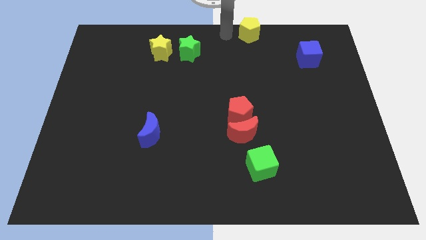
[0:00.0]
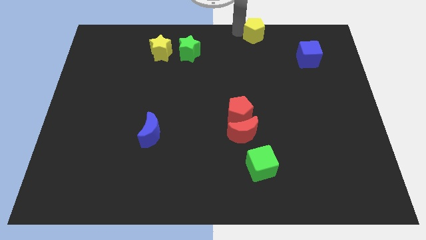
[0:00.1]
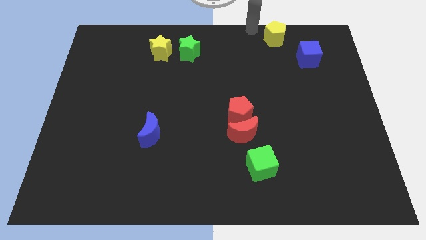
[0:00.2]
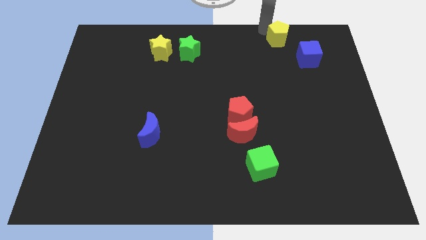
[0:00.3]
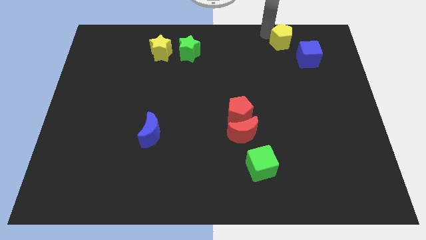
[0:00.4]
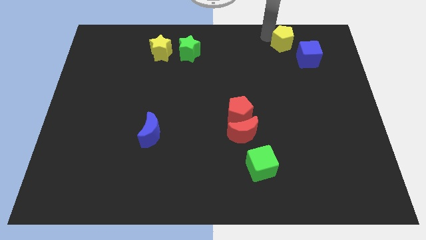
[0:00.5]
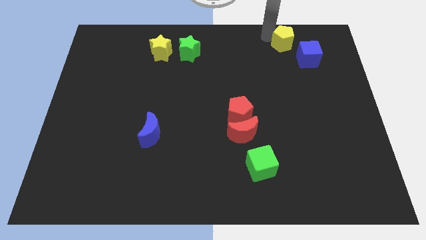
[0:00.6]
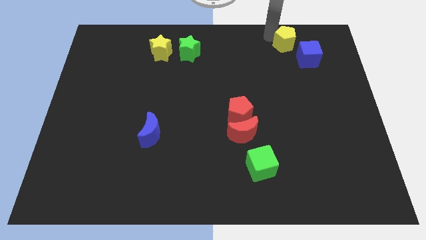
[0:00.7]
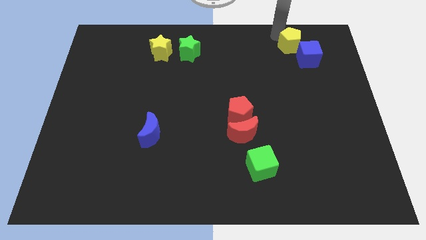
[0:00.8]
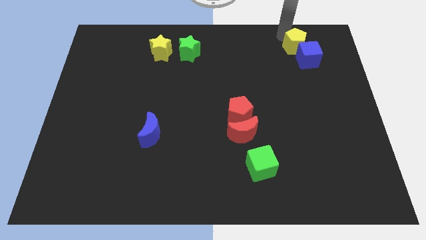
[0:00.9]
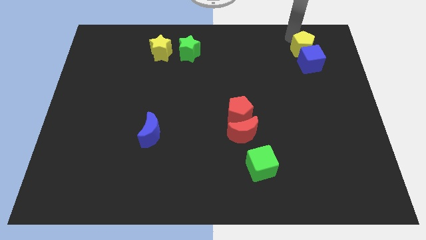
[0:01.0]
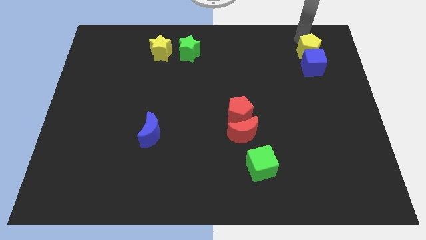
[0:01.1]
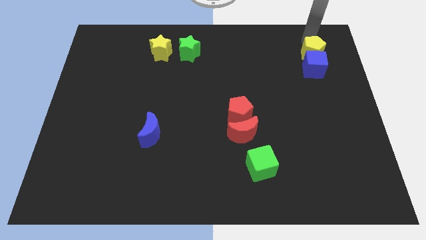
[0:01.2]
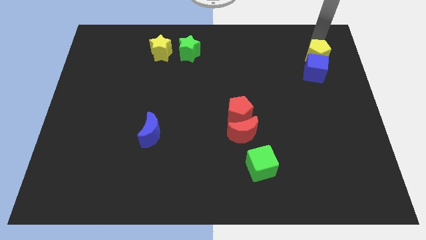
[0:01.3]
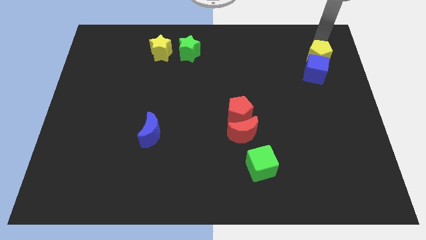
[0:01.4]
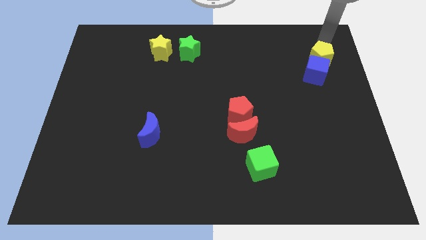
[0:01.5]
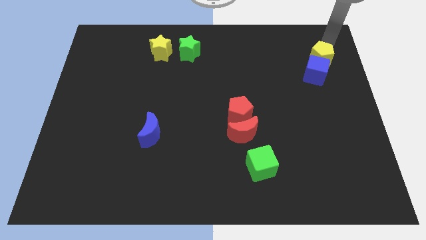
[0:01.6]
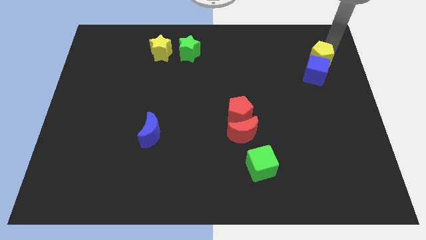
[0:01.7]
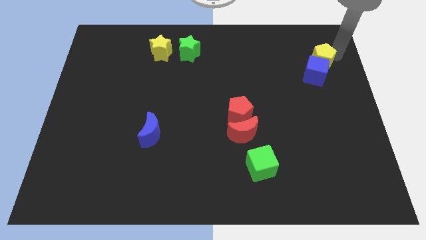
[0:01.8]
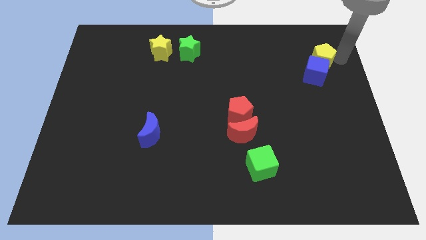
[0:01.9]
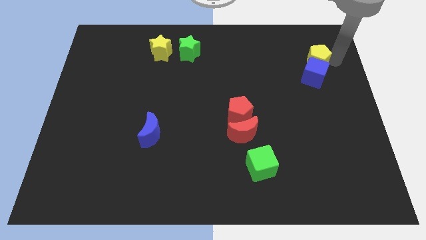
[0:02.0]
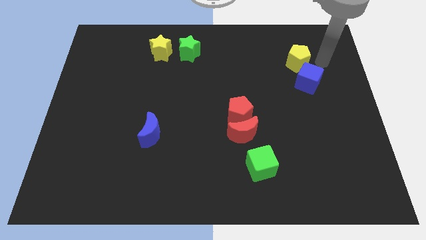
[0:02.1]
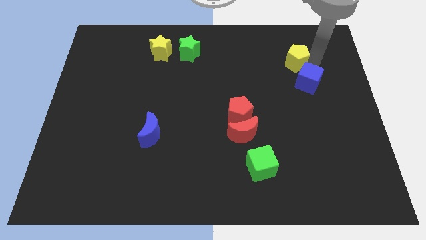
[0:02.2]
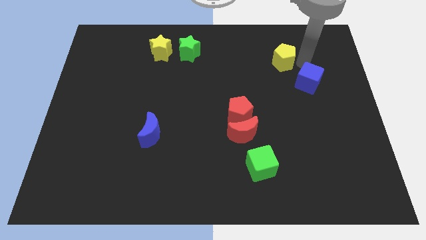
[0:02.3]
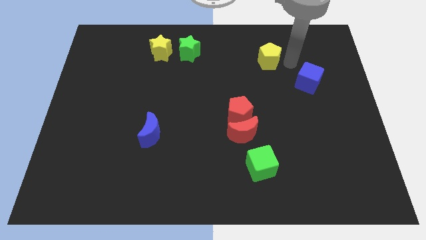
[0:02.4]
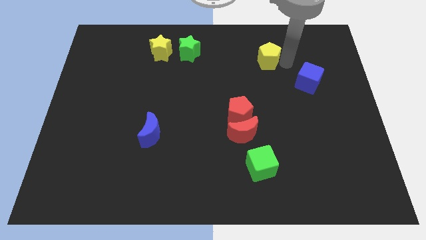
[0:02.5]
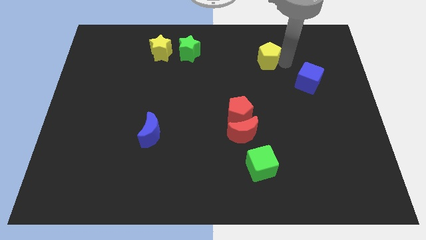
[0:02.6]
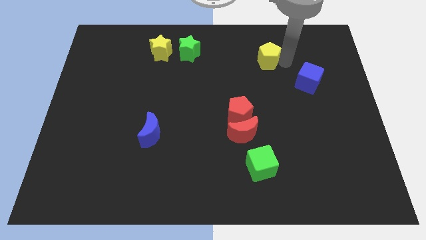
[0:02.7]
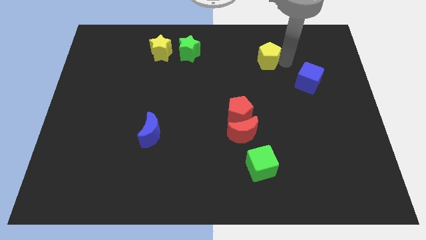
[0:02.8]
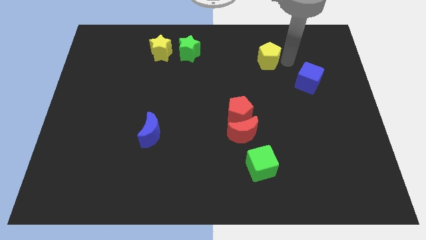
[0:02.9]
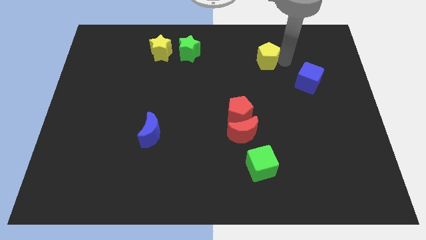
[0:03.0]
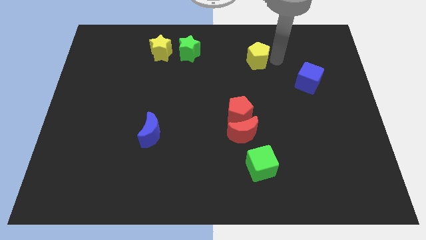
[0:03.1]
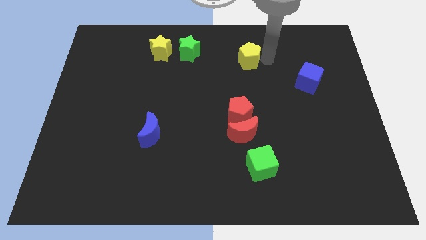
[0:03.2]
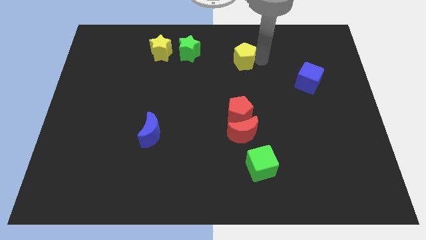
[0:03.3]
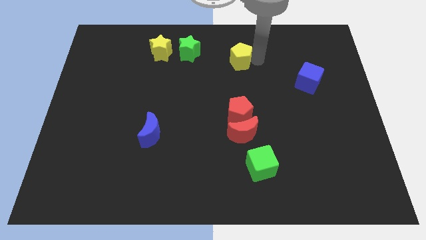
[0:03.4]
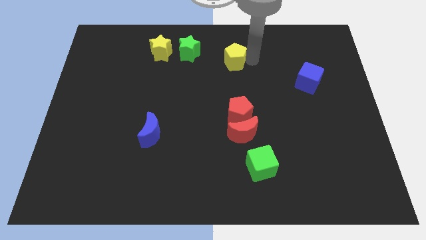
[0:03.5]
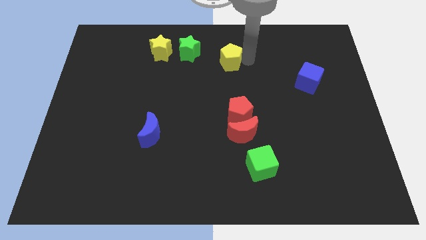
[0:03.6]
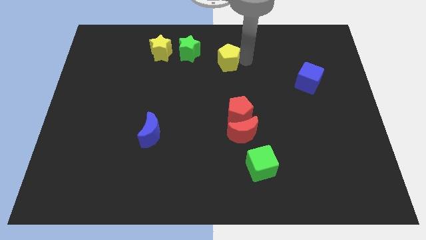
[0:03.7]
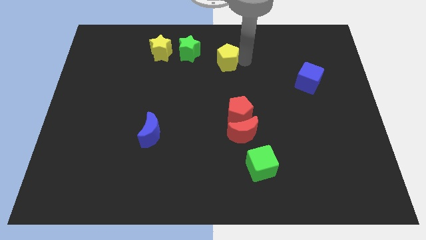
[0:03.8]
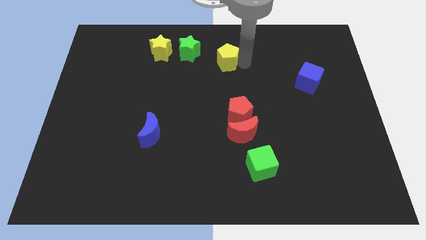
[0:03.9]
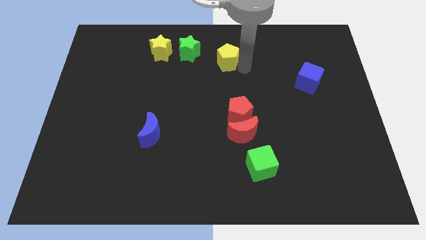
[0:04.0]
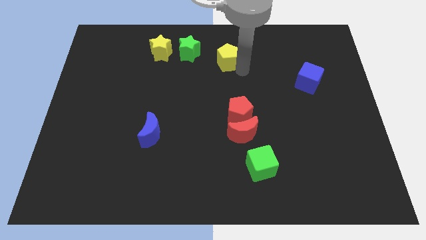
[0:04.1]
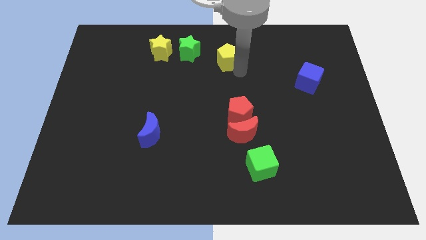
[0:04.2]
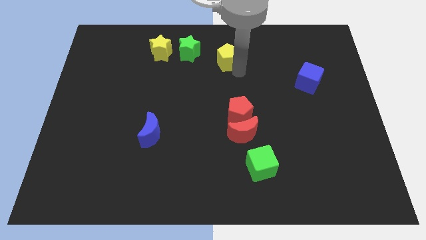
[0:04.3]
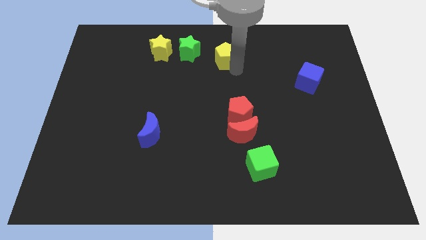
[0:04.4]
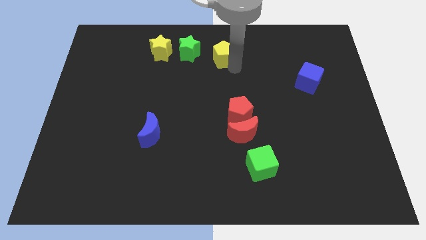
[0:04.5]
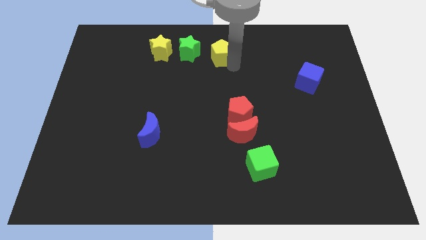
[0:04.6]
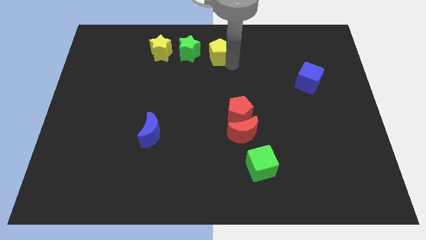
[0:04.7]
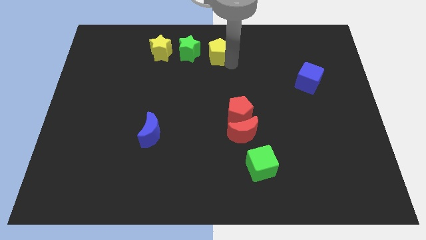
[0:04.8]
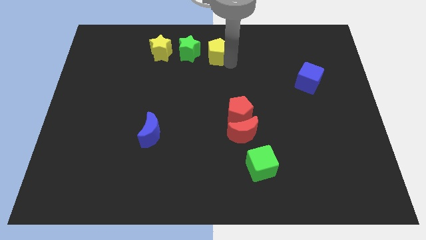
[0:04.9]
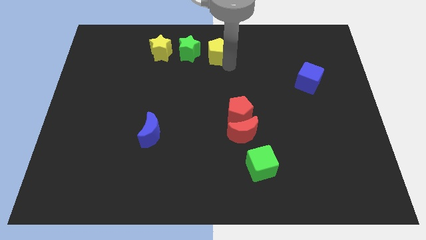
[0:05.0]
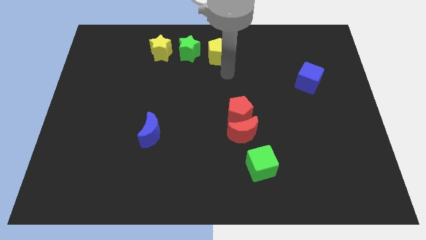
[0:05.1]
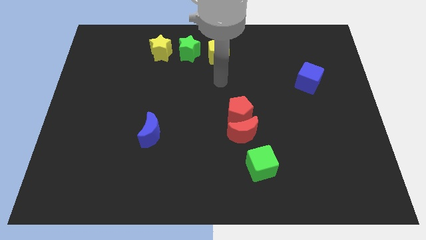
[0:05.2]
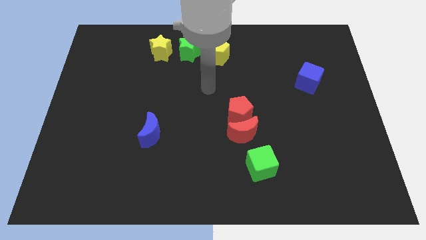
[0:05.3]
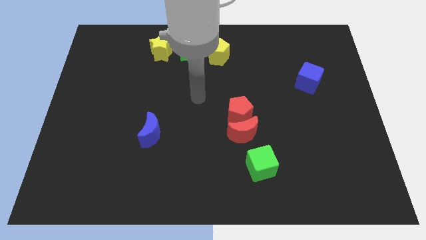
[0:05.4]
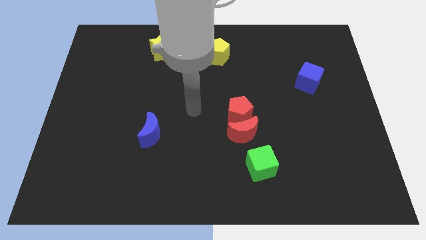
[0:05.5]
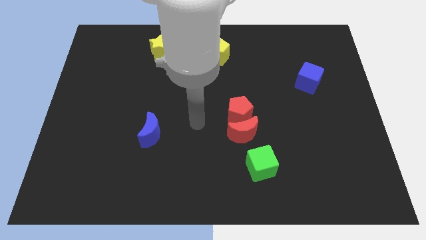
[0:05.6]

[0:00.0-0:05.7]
move yellow pentagon to the right side of the green star

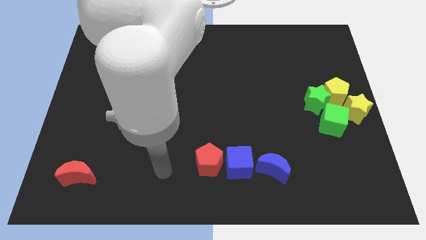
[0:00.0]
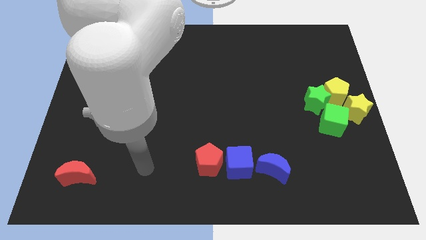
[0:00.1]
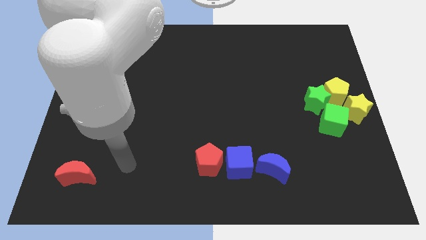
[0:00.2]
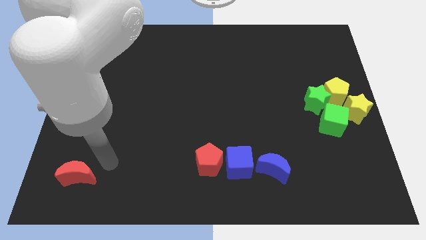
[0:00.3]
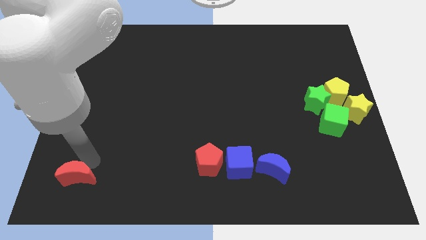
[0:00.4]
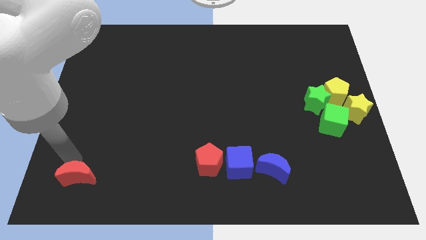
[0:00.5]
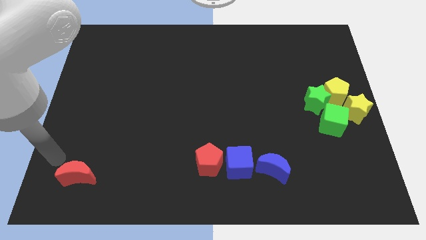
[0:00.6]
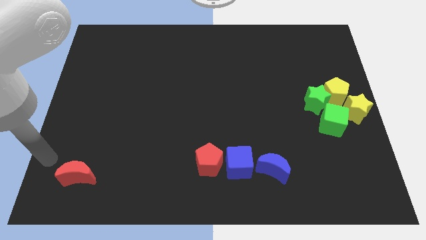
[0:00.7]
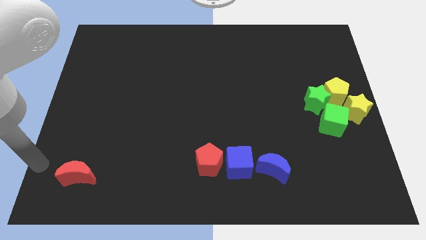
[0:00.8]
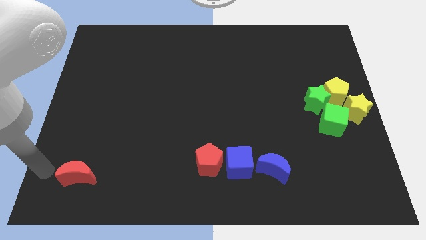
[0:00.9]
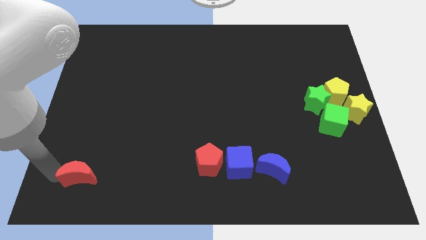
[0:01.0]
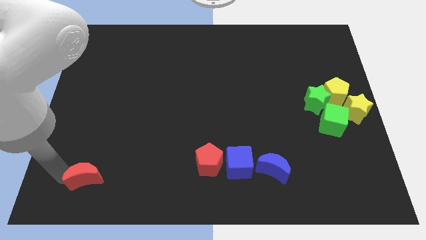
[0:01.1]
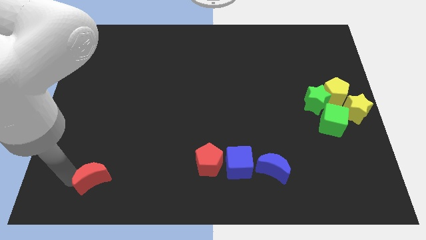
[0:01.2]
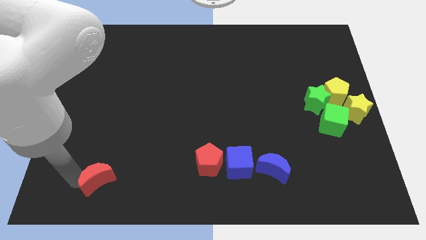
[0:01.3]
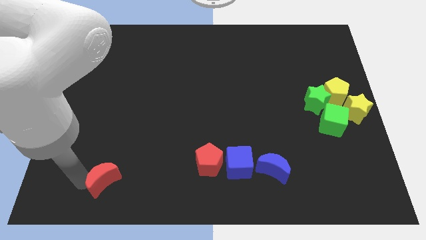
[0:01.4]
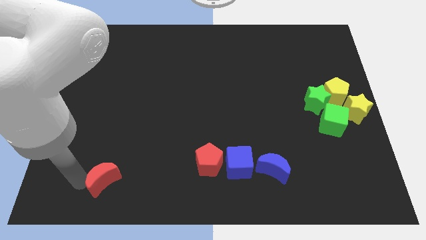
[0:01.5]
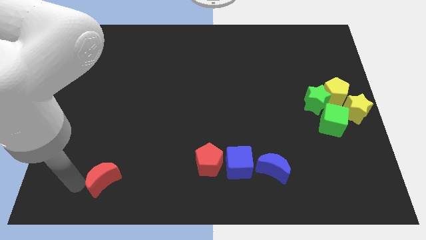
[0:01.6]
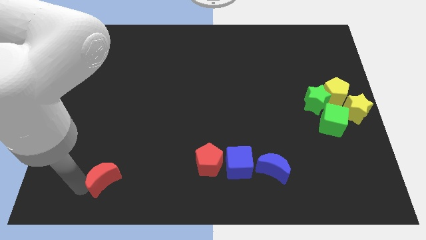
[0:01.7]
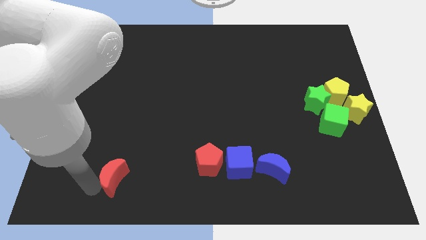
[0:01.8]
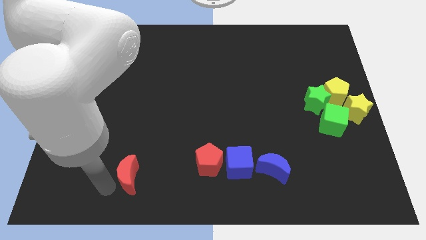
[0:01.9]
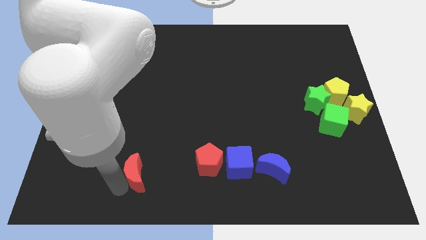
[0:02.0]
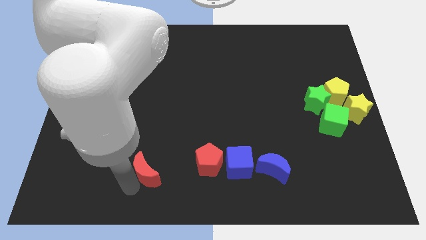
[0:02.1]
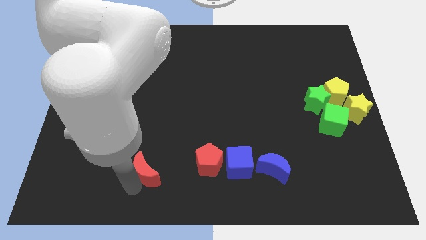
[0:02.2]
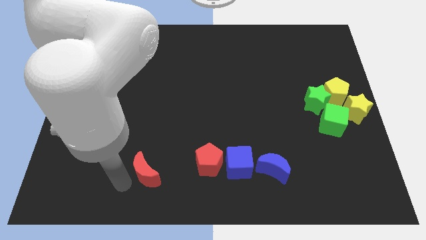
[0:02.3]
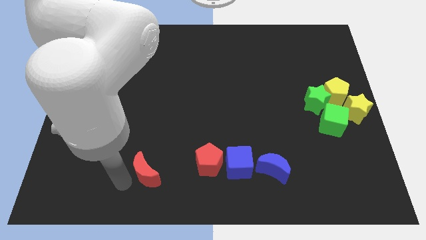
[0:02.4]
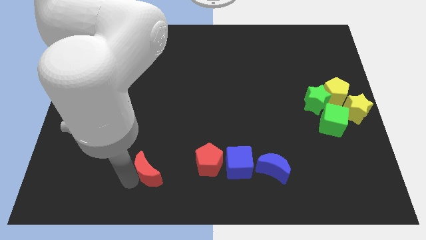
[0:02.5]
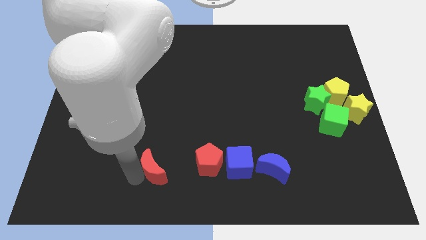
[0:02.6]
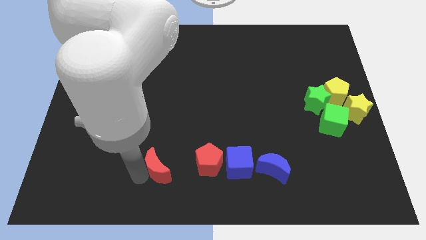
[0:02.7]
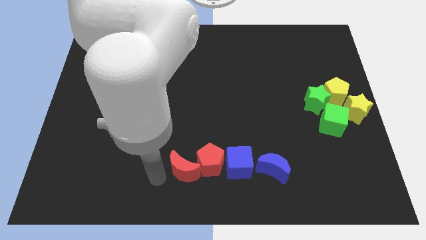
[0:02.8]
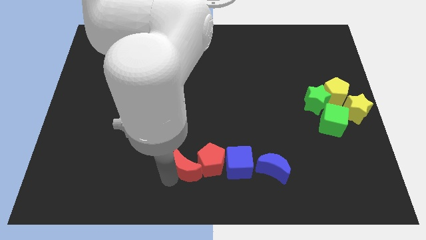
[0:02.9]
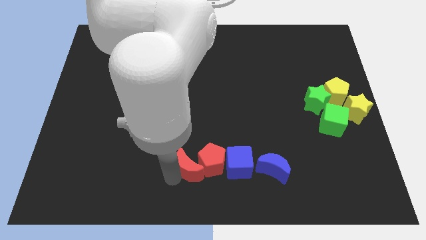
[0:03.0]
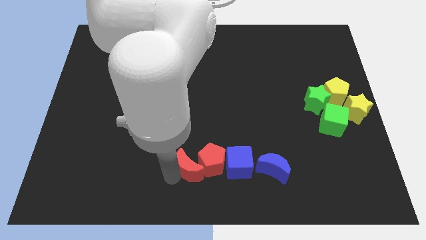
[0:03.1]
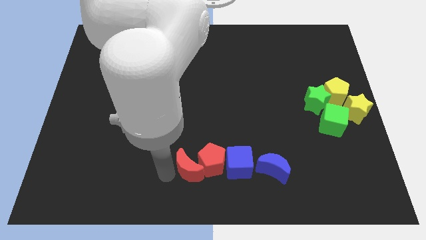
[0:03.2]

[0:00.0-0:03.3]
move red moon left beside the red pentagon
